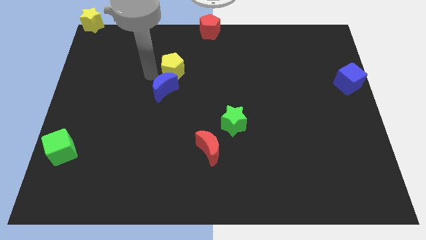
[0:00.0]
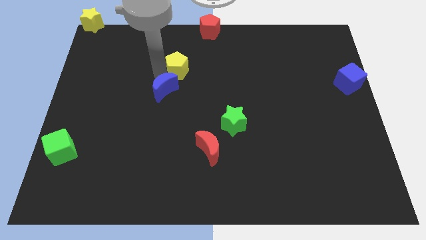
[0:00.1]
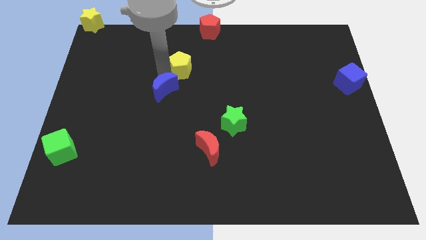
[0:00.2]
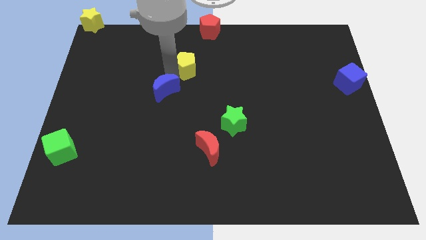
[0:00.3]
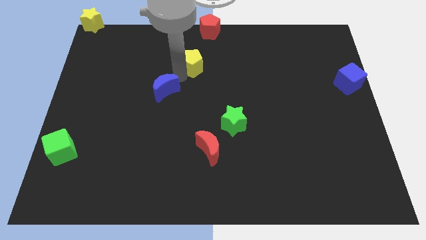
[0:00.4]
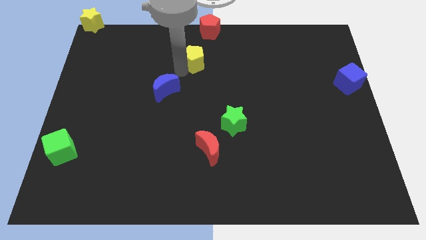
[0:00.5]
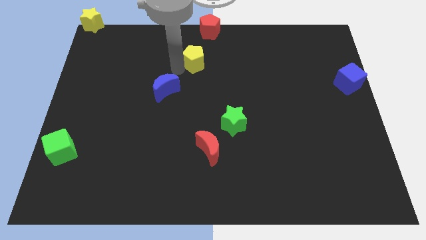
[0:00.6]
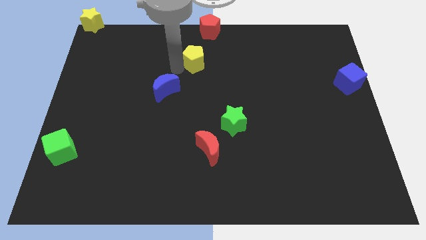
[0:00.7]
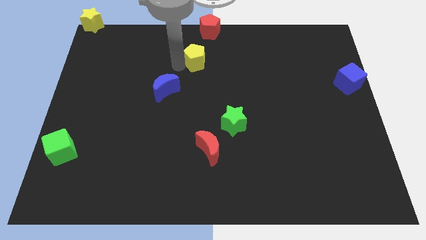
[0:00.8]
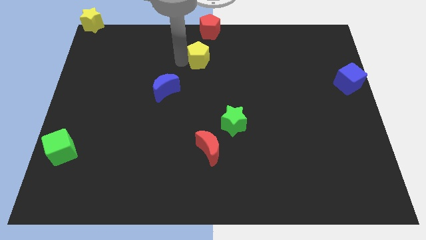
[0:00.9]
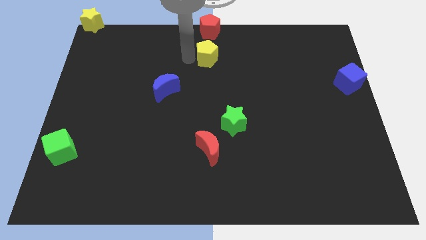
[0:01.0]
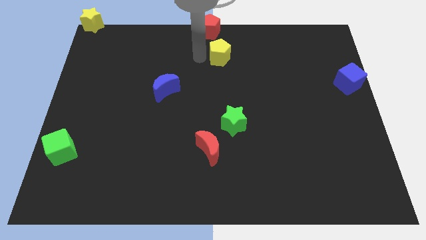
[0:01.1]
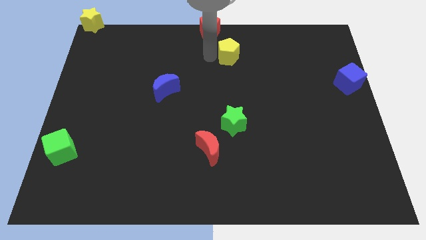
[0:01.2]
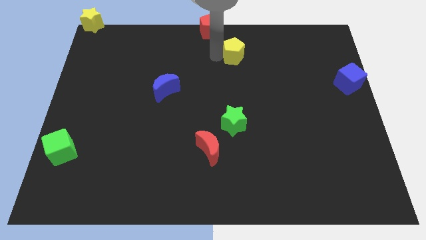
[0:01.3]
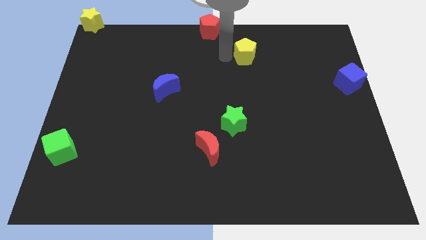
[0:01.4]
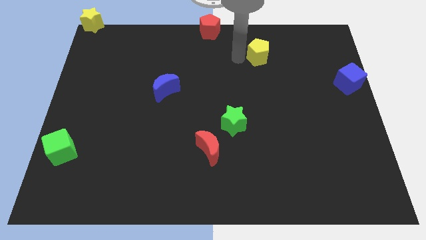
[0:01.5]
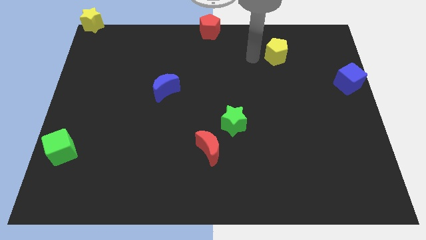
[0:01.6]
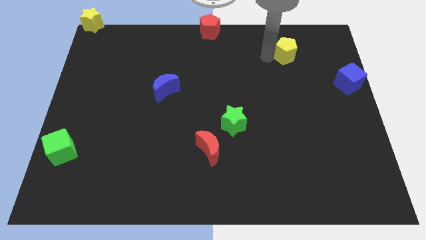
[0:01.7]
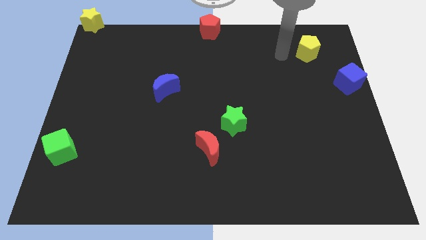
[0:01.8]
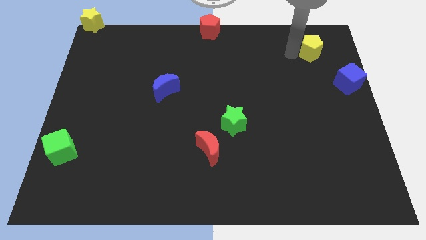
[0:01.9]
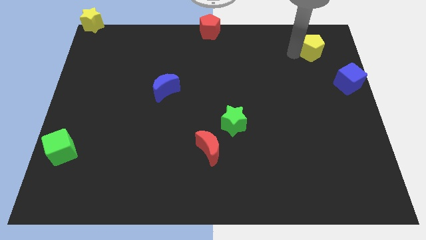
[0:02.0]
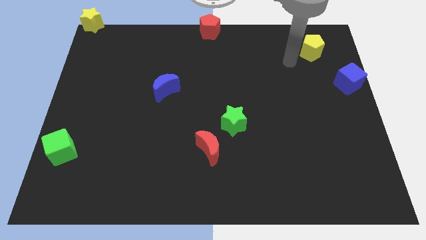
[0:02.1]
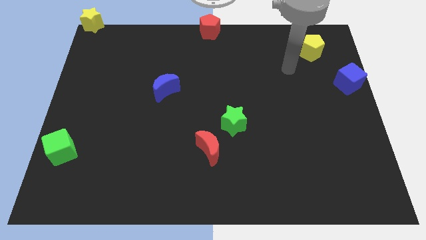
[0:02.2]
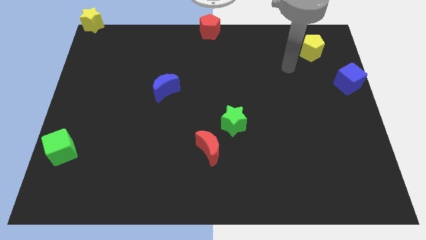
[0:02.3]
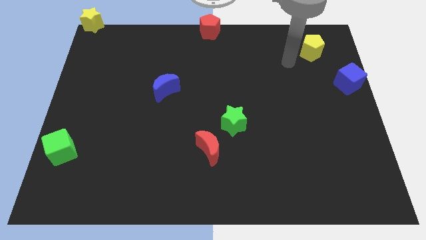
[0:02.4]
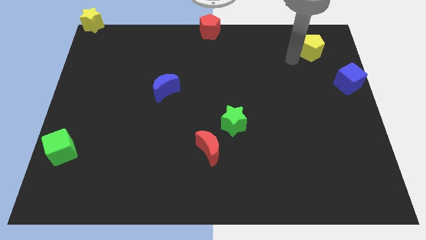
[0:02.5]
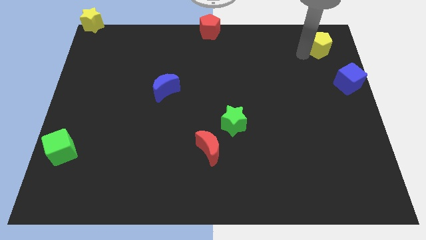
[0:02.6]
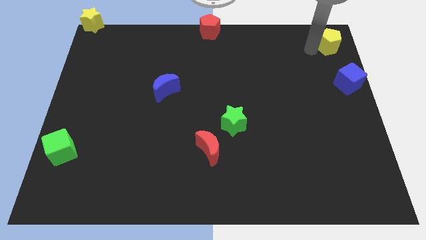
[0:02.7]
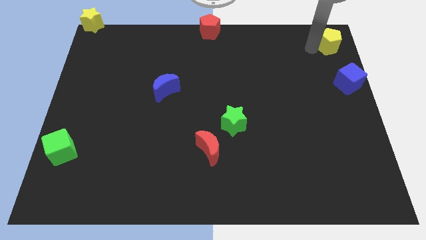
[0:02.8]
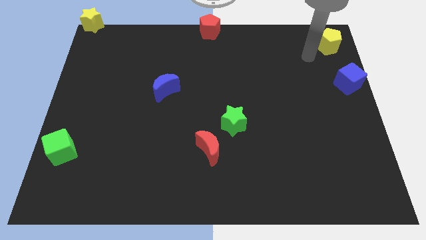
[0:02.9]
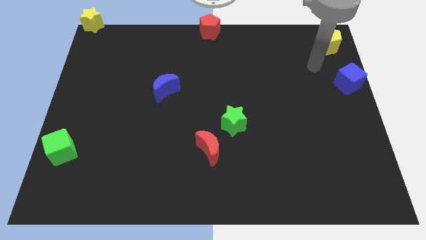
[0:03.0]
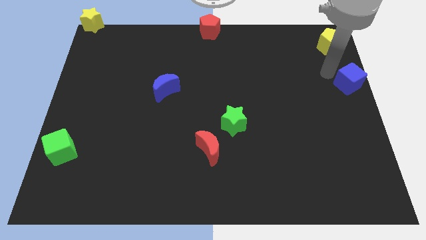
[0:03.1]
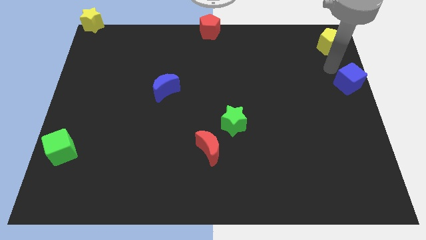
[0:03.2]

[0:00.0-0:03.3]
move the yellow pentagon to the top right of the board

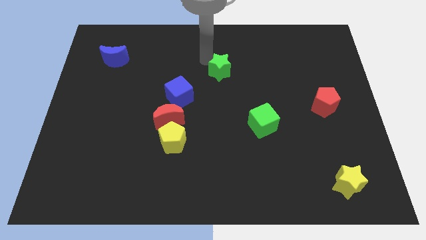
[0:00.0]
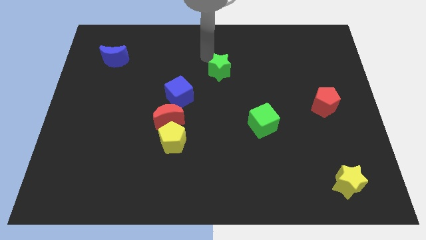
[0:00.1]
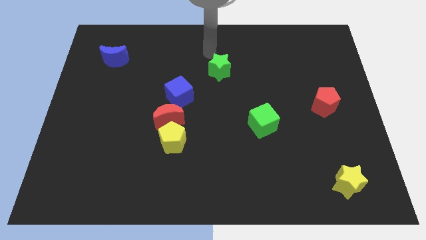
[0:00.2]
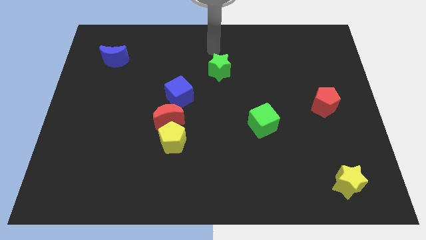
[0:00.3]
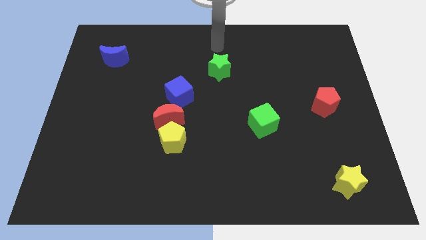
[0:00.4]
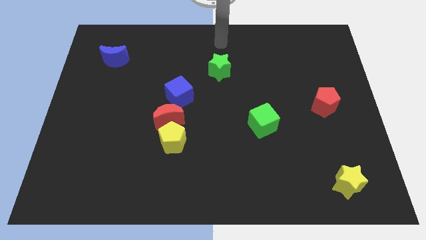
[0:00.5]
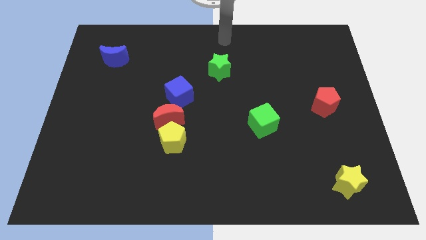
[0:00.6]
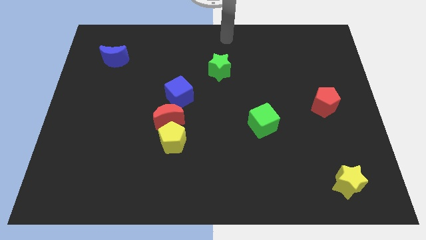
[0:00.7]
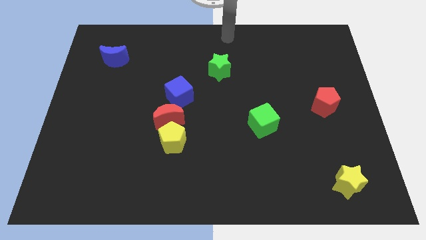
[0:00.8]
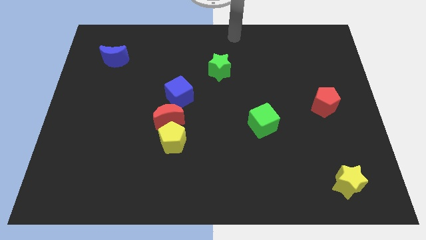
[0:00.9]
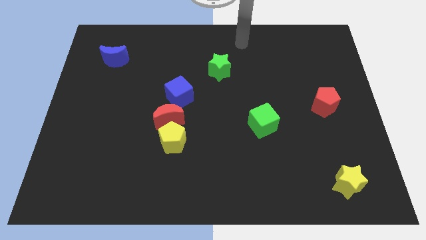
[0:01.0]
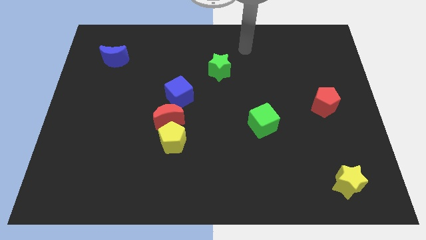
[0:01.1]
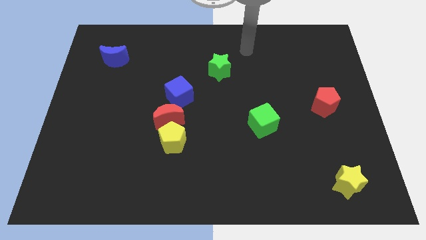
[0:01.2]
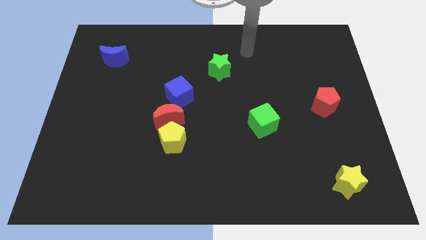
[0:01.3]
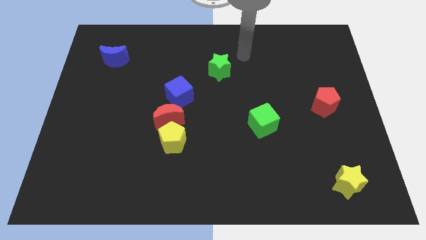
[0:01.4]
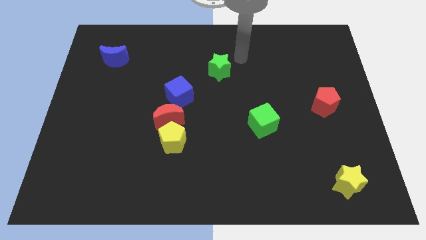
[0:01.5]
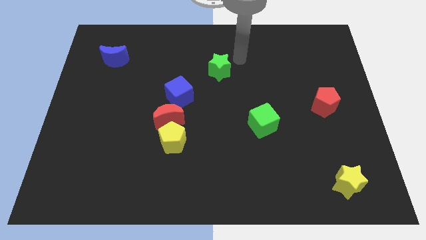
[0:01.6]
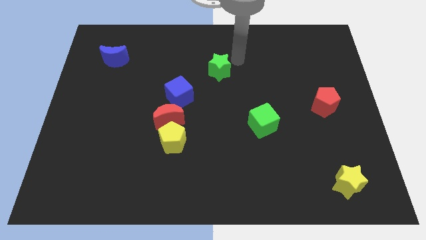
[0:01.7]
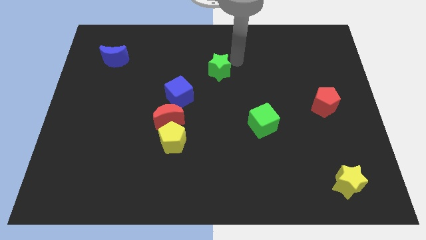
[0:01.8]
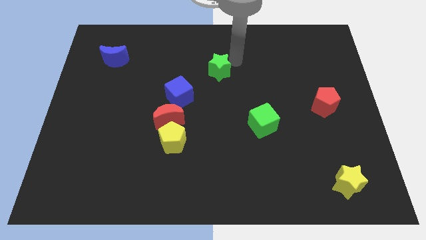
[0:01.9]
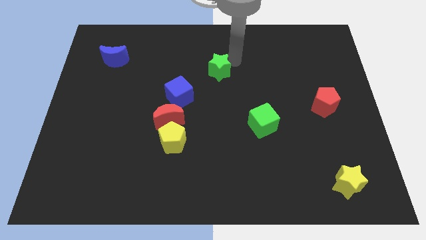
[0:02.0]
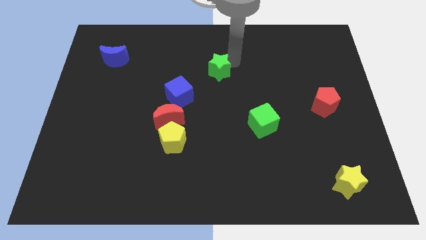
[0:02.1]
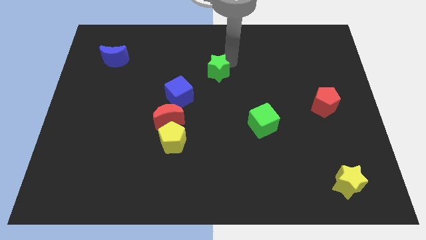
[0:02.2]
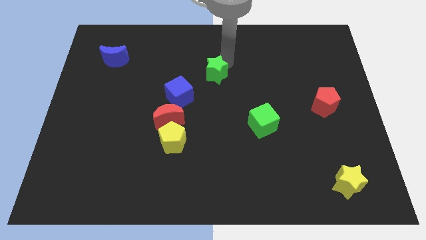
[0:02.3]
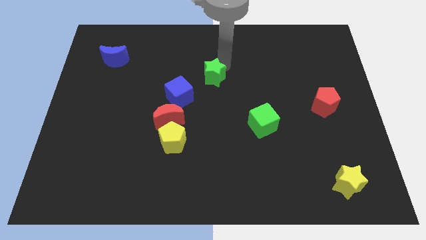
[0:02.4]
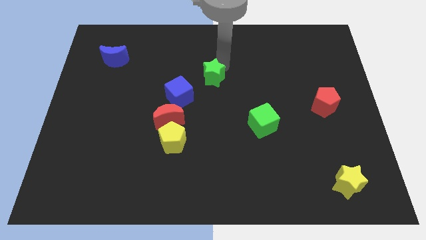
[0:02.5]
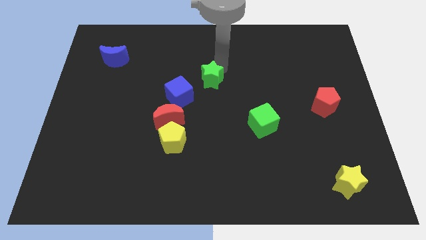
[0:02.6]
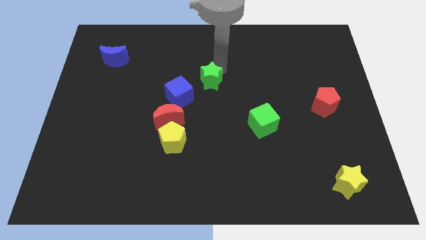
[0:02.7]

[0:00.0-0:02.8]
slide the green star towards the blue cube

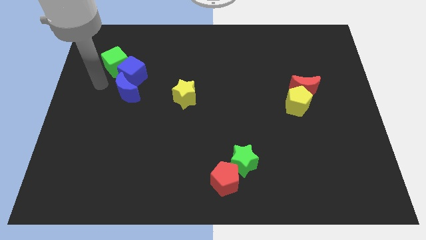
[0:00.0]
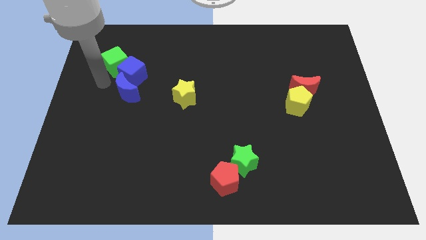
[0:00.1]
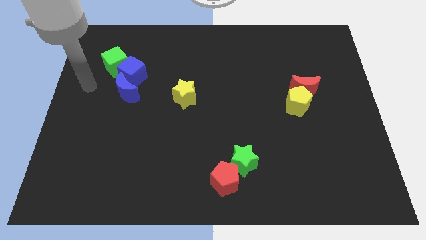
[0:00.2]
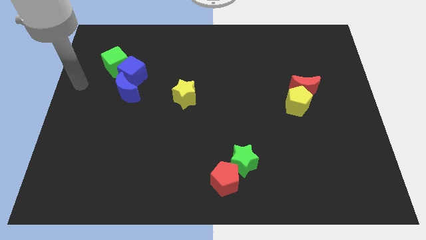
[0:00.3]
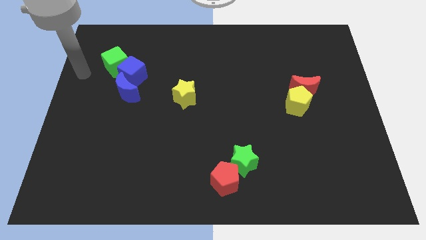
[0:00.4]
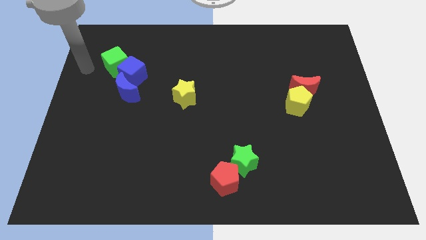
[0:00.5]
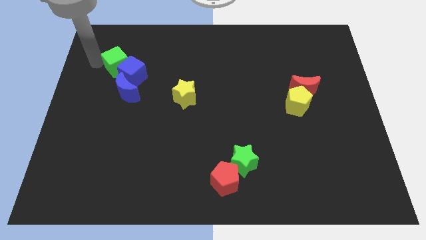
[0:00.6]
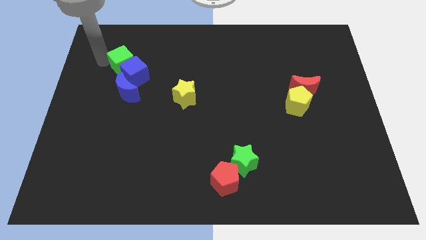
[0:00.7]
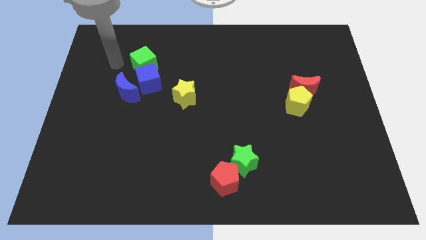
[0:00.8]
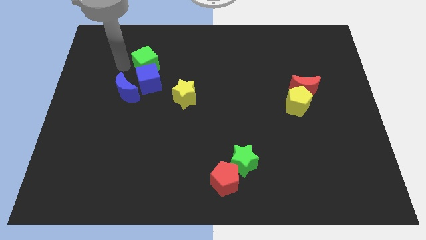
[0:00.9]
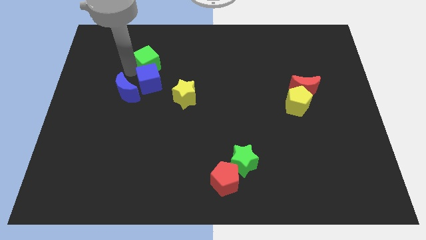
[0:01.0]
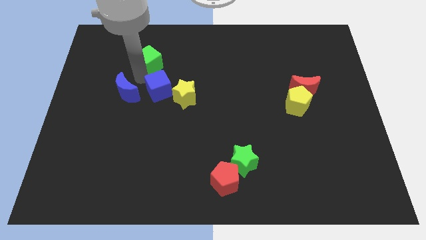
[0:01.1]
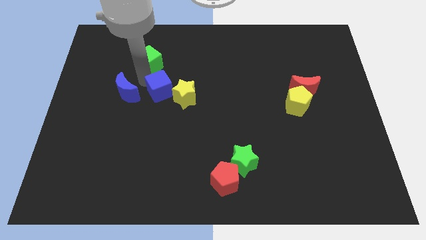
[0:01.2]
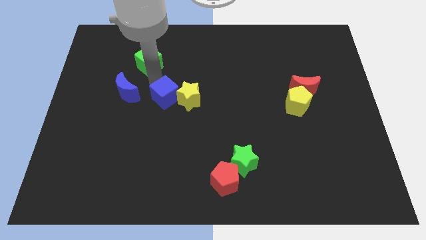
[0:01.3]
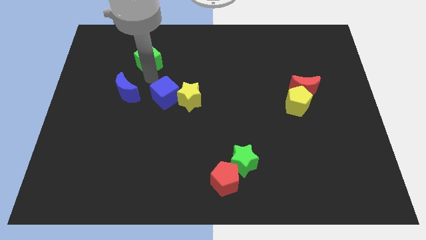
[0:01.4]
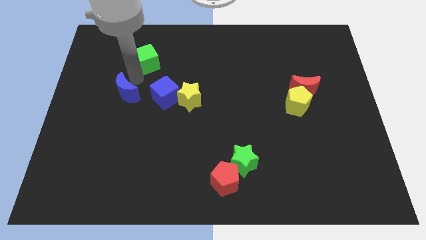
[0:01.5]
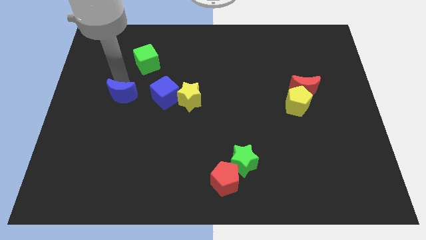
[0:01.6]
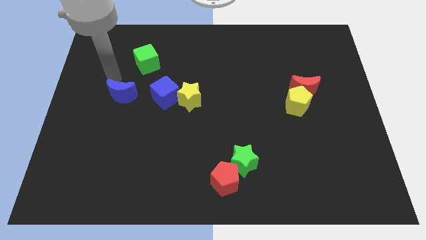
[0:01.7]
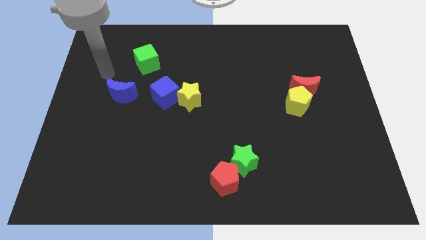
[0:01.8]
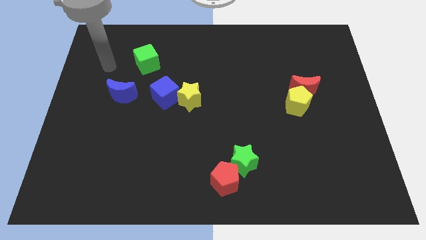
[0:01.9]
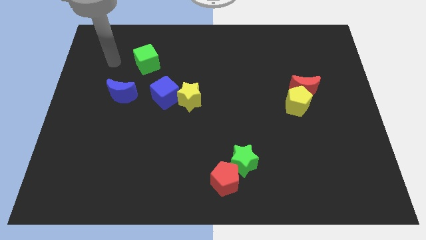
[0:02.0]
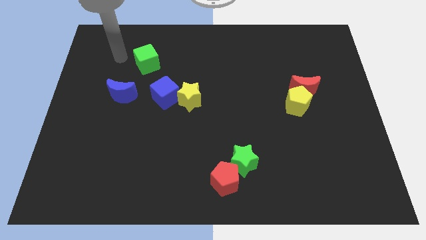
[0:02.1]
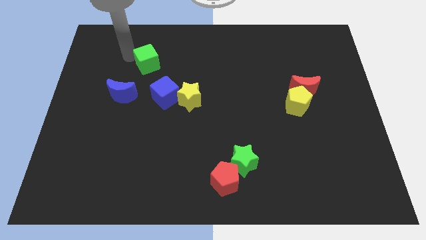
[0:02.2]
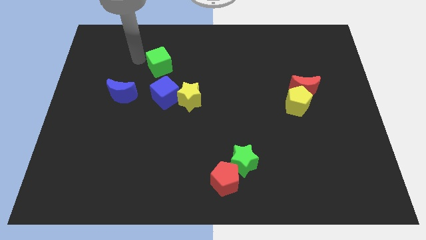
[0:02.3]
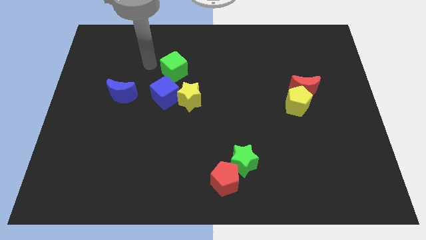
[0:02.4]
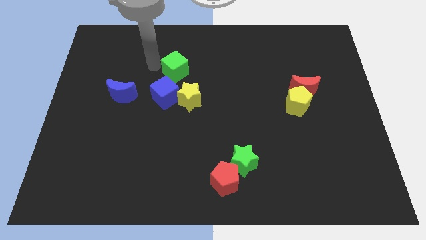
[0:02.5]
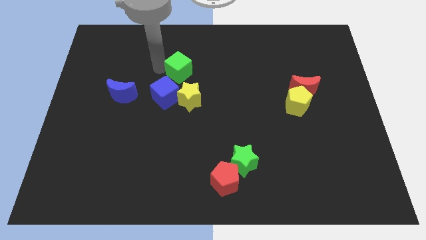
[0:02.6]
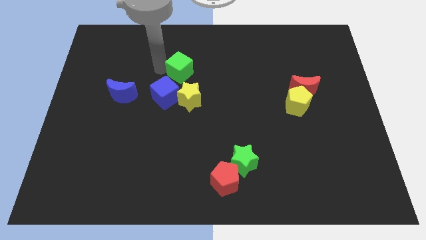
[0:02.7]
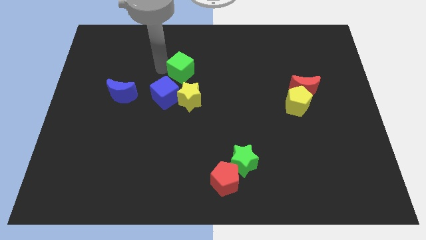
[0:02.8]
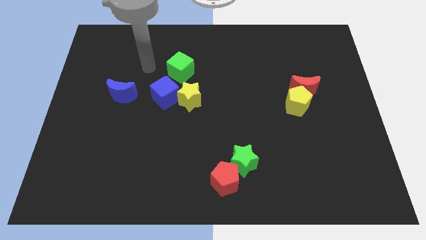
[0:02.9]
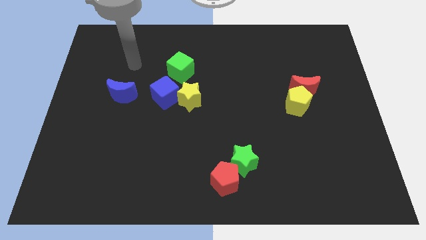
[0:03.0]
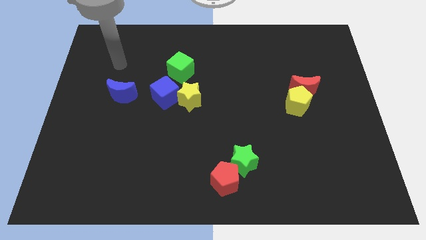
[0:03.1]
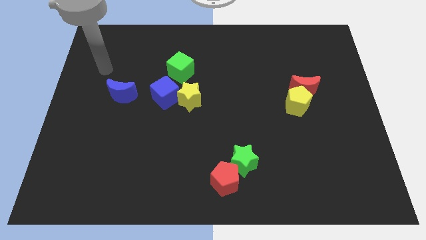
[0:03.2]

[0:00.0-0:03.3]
slide green cube and blue cube diagonal to each other
